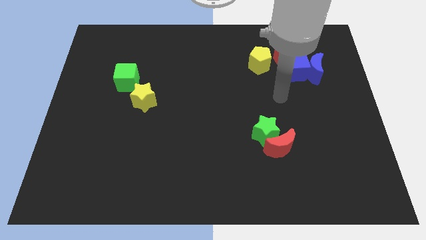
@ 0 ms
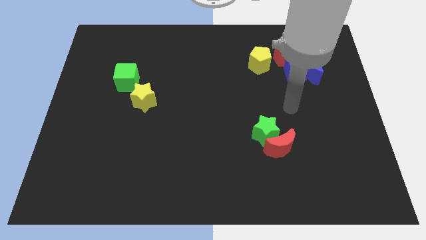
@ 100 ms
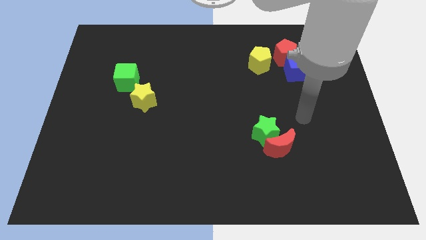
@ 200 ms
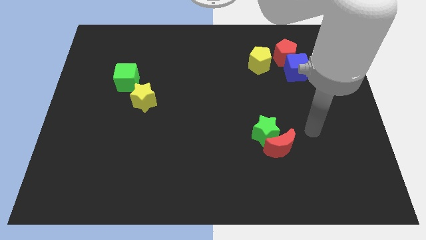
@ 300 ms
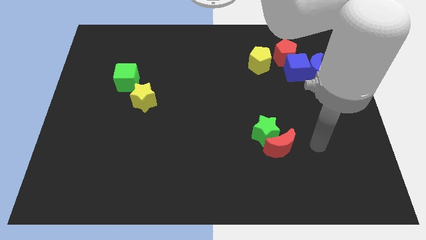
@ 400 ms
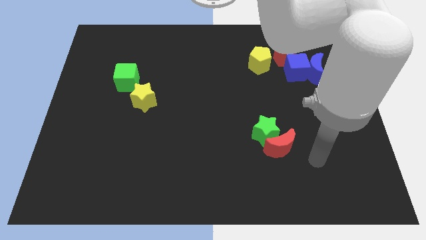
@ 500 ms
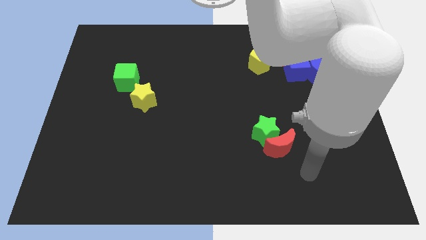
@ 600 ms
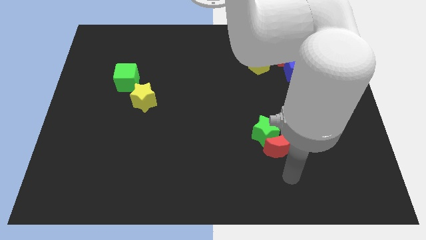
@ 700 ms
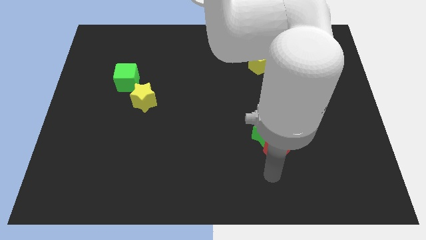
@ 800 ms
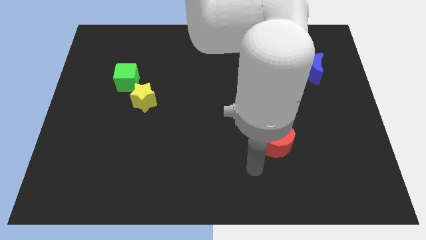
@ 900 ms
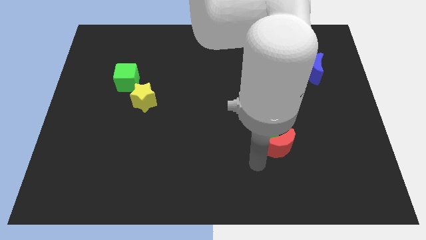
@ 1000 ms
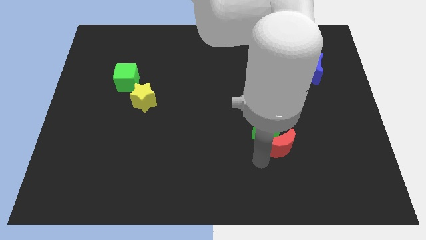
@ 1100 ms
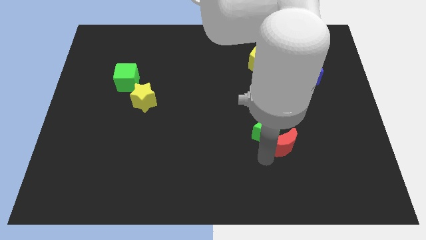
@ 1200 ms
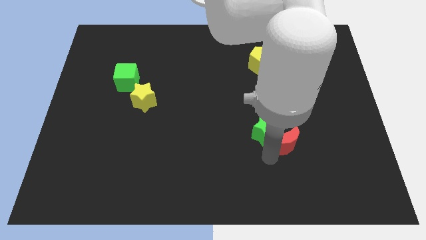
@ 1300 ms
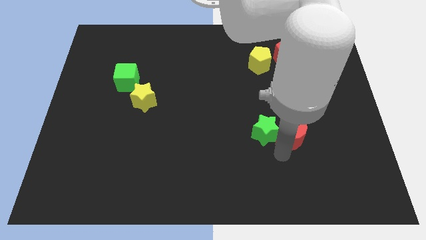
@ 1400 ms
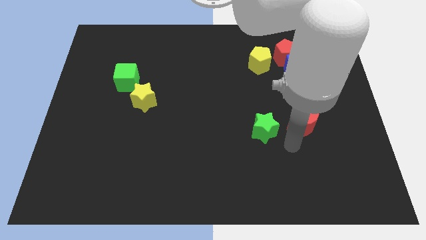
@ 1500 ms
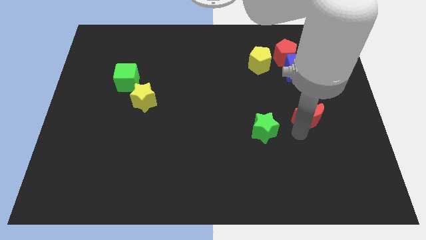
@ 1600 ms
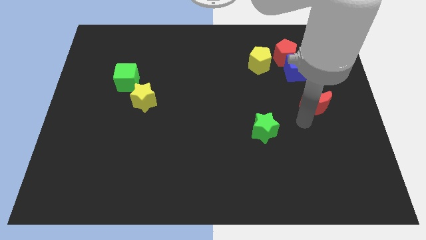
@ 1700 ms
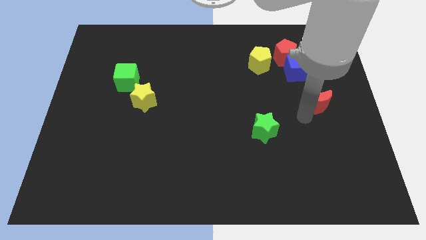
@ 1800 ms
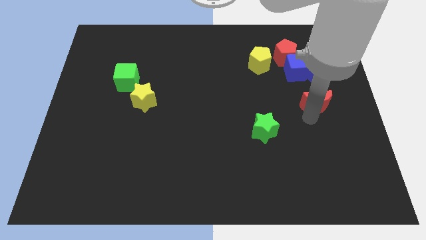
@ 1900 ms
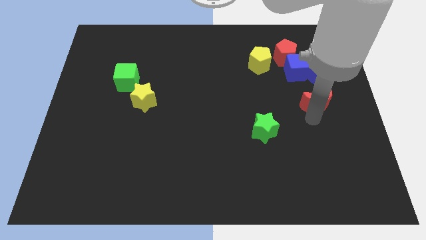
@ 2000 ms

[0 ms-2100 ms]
separate the red moon from the green star

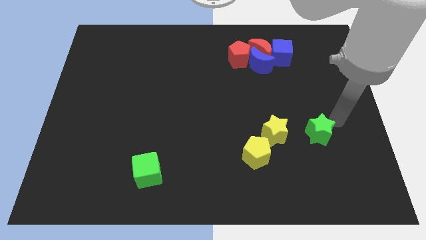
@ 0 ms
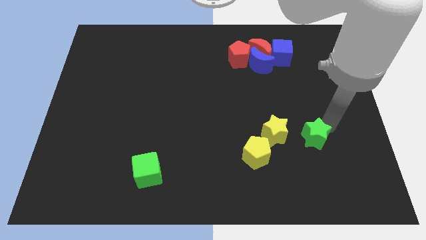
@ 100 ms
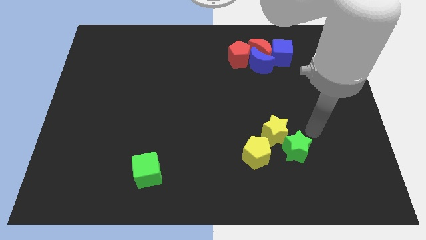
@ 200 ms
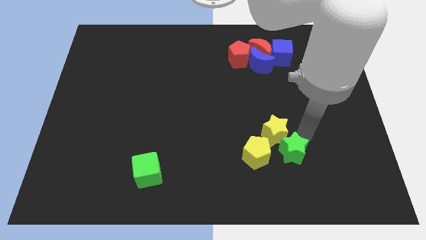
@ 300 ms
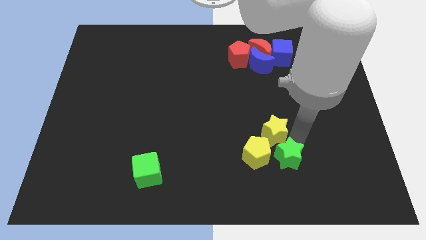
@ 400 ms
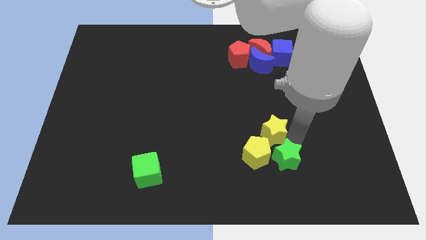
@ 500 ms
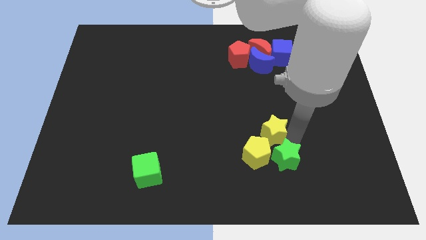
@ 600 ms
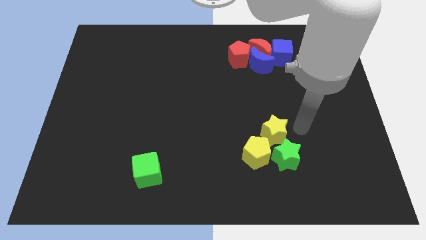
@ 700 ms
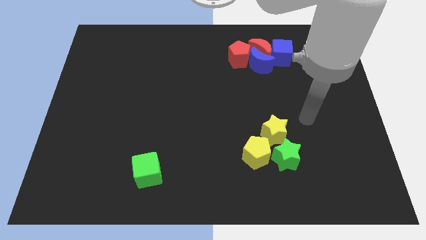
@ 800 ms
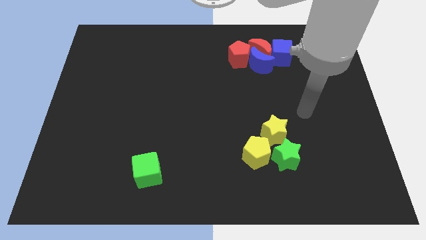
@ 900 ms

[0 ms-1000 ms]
place the green star to the bottom of the yellow star

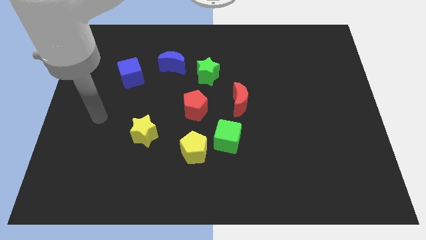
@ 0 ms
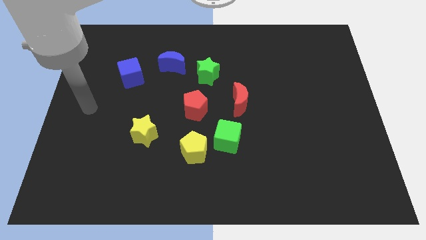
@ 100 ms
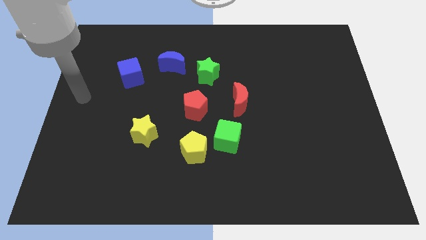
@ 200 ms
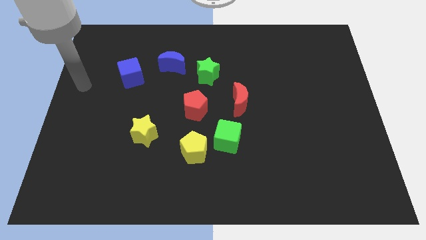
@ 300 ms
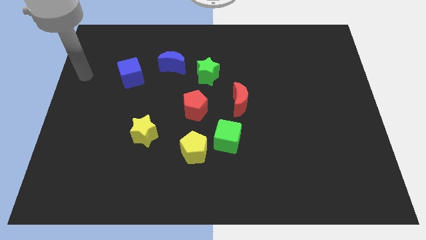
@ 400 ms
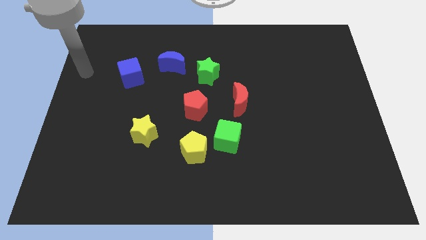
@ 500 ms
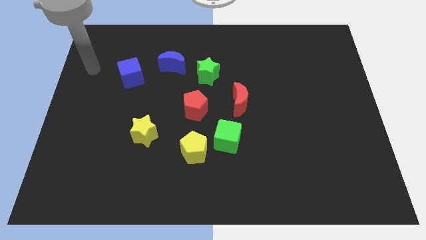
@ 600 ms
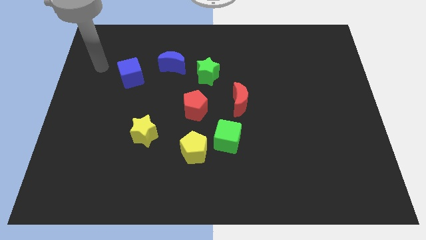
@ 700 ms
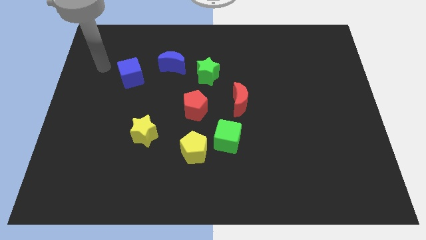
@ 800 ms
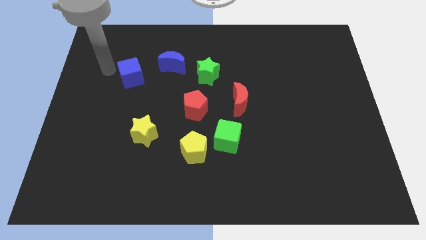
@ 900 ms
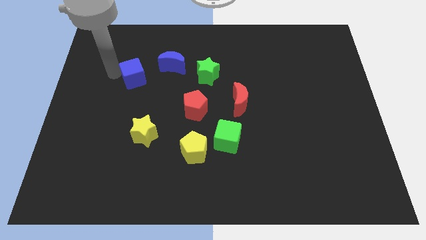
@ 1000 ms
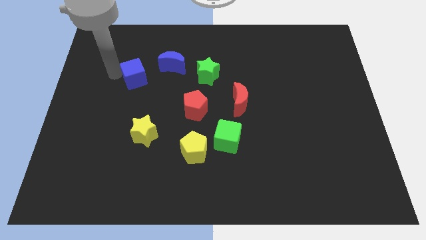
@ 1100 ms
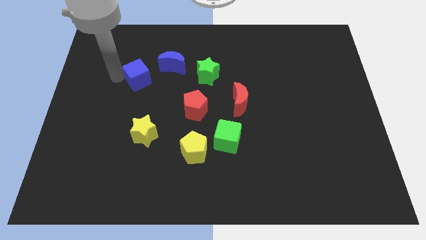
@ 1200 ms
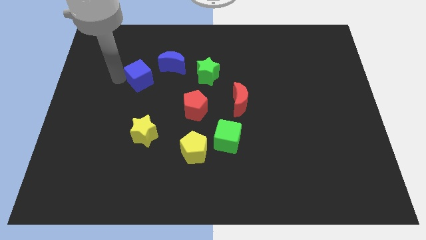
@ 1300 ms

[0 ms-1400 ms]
move your arm left to the blue cube

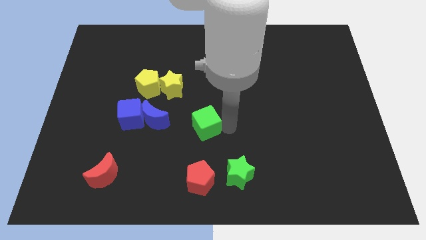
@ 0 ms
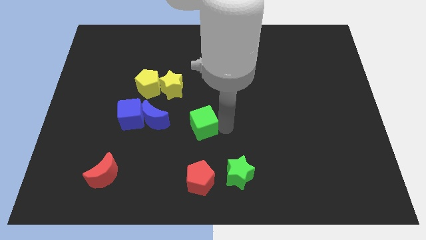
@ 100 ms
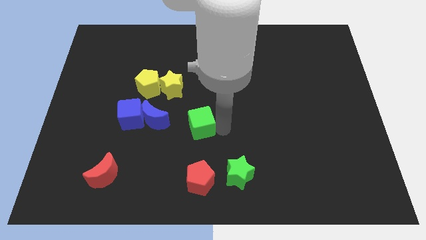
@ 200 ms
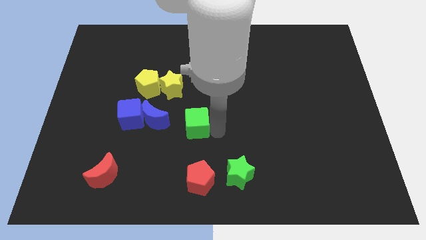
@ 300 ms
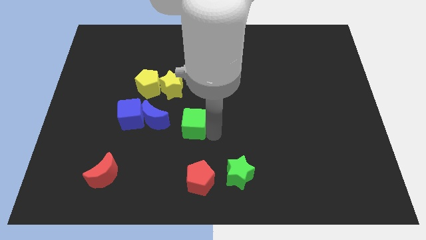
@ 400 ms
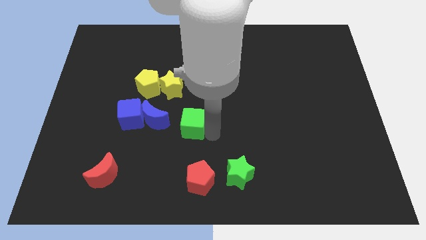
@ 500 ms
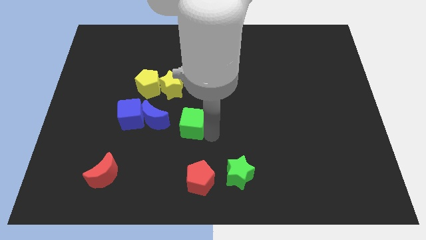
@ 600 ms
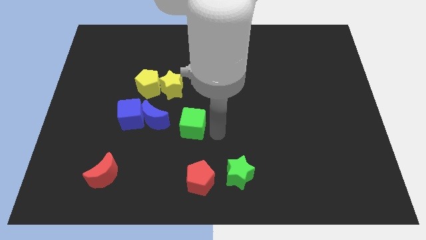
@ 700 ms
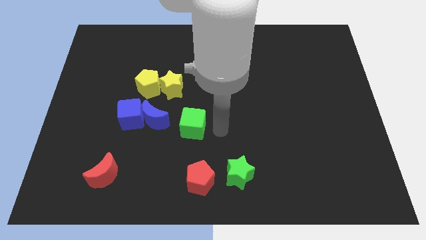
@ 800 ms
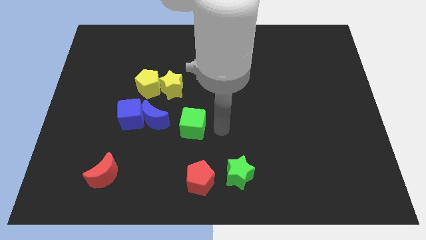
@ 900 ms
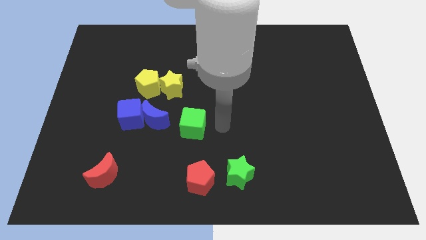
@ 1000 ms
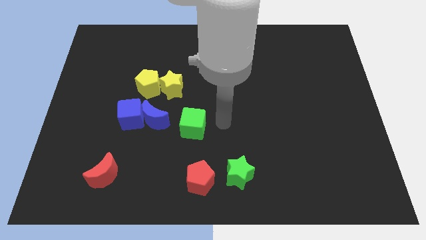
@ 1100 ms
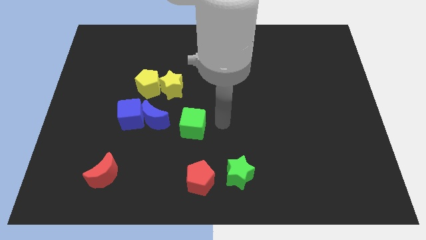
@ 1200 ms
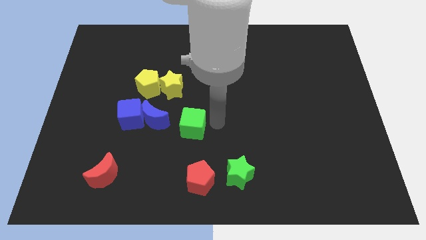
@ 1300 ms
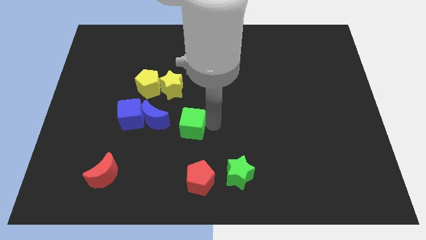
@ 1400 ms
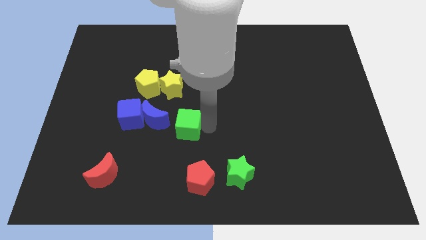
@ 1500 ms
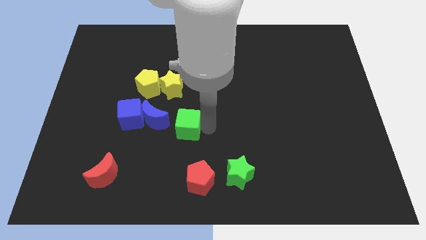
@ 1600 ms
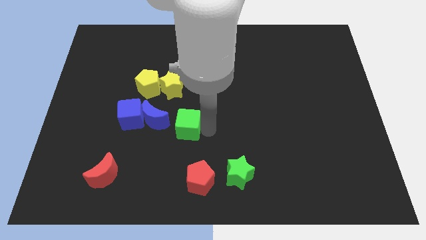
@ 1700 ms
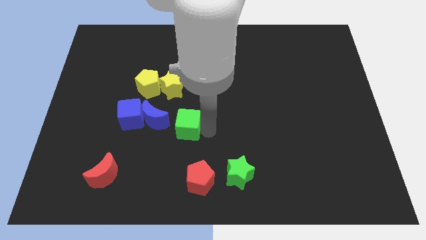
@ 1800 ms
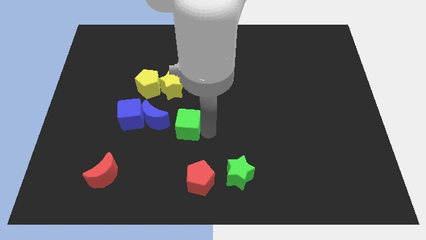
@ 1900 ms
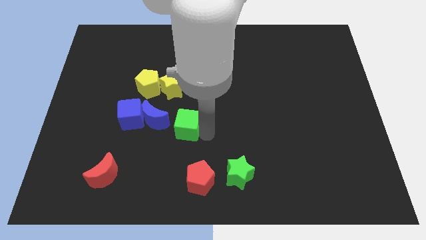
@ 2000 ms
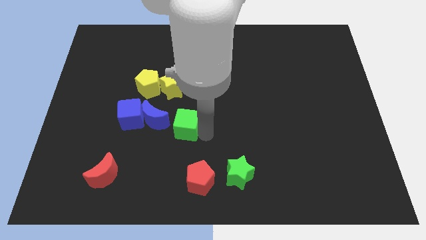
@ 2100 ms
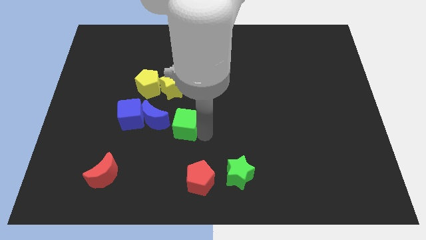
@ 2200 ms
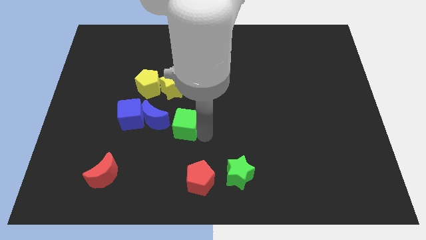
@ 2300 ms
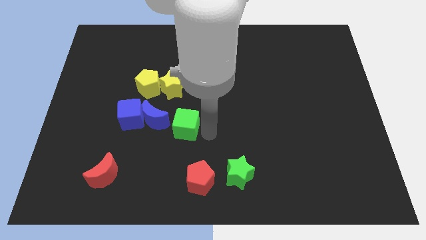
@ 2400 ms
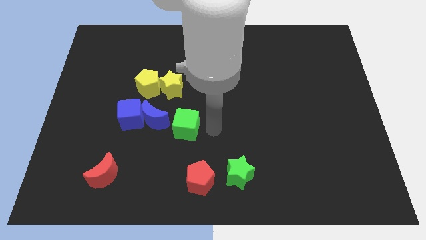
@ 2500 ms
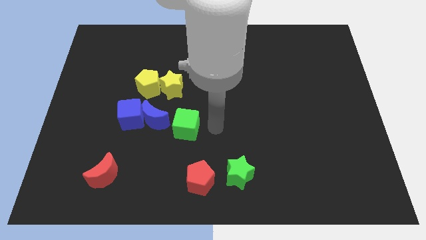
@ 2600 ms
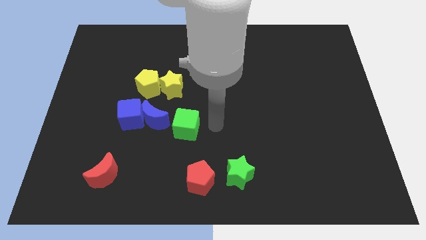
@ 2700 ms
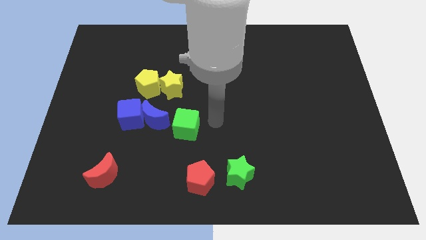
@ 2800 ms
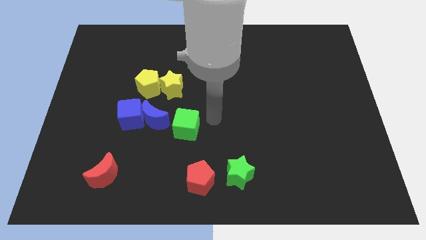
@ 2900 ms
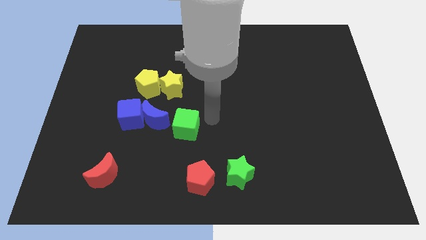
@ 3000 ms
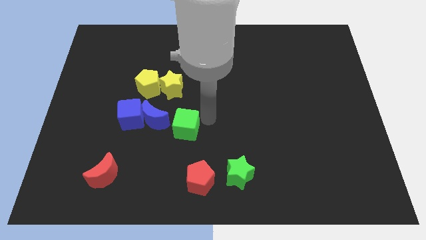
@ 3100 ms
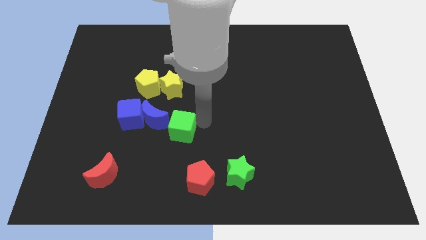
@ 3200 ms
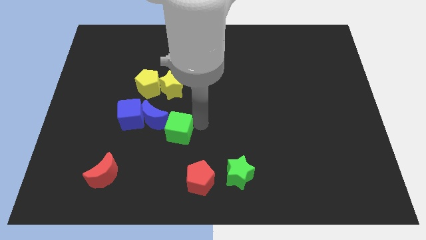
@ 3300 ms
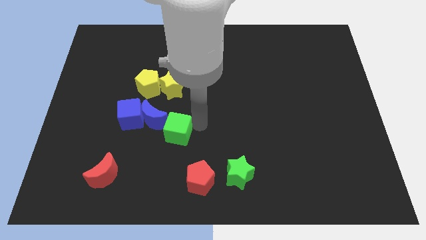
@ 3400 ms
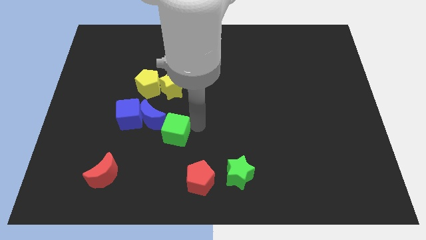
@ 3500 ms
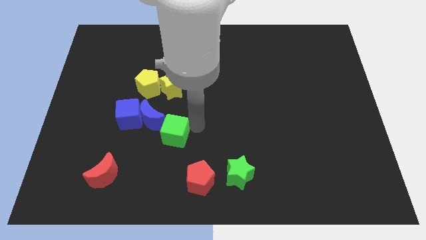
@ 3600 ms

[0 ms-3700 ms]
push the green cube below the yellow star

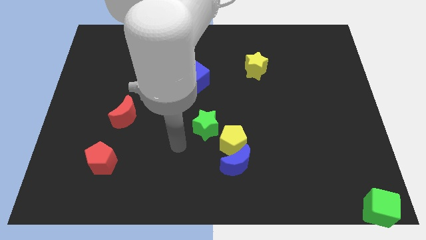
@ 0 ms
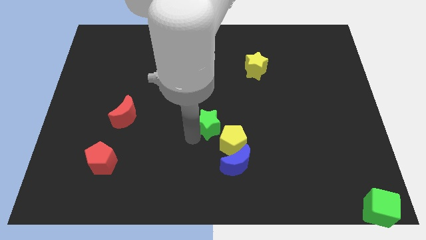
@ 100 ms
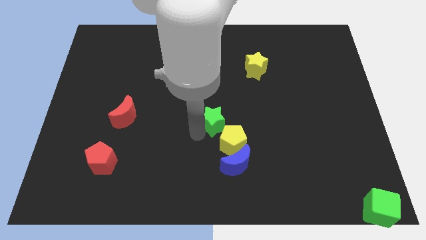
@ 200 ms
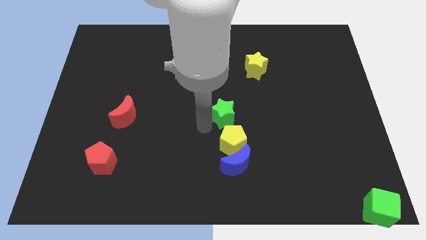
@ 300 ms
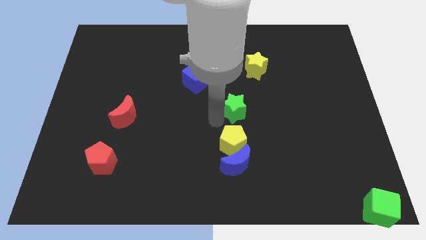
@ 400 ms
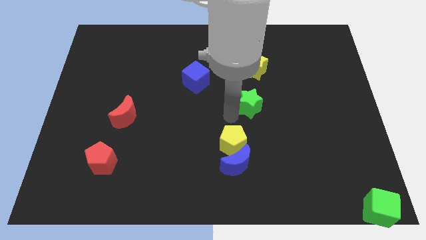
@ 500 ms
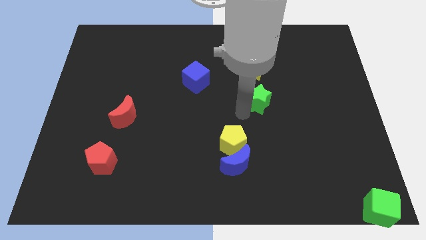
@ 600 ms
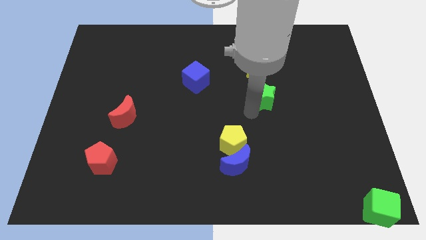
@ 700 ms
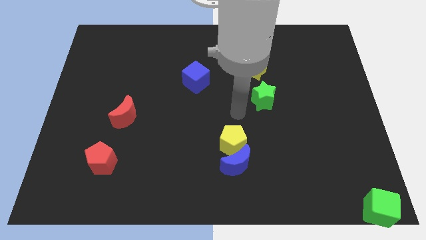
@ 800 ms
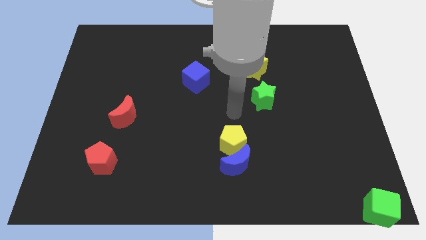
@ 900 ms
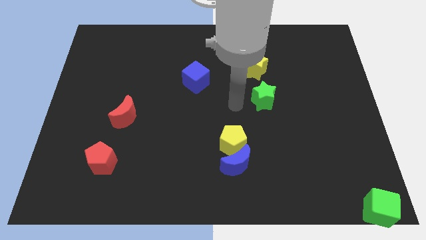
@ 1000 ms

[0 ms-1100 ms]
move the green star below the yellow star
